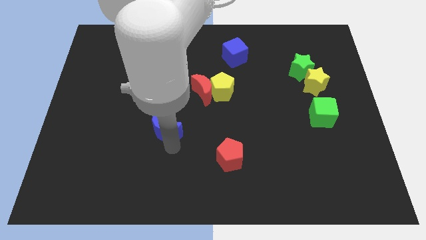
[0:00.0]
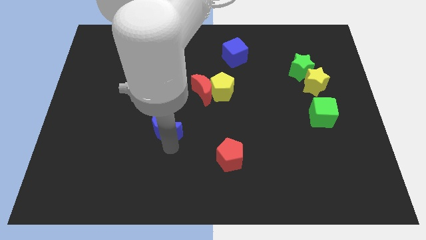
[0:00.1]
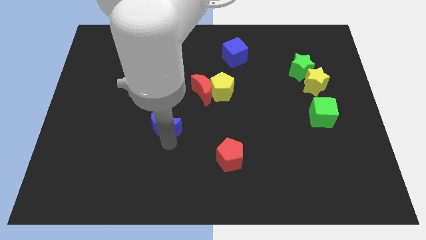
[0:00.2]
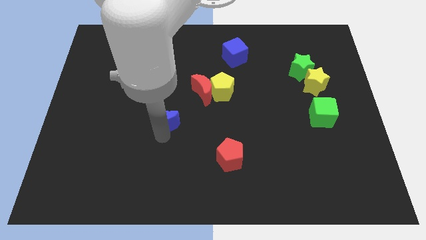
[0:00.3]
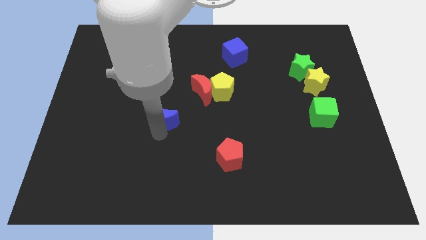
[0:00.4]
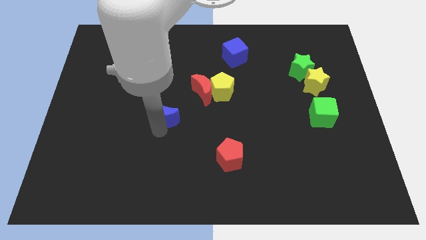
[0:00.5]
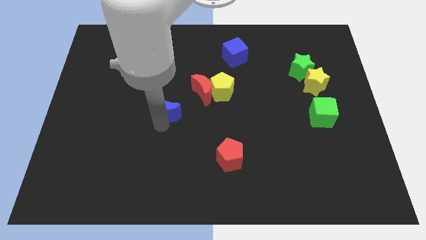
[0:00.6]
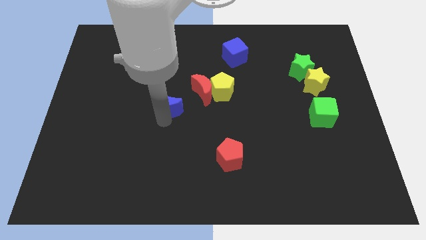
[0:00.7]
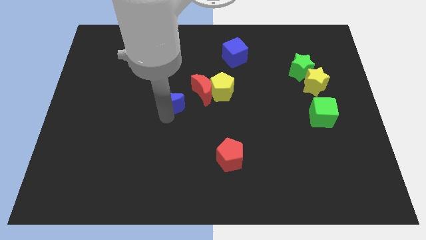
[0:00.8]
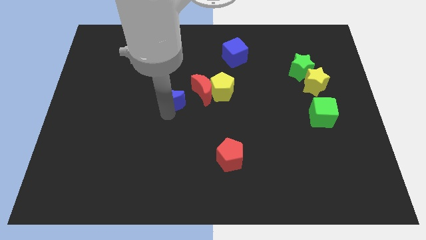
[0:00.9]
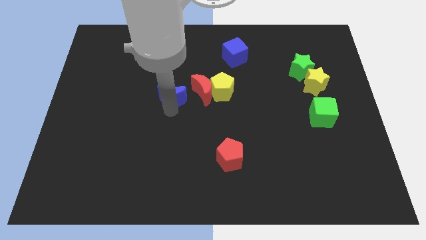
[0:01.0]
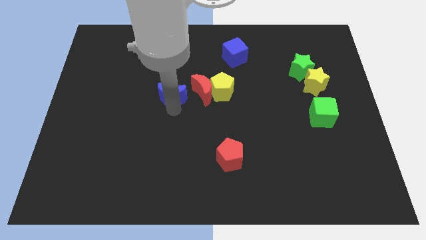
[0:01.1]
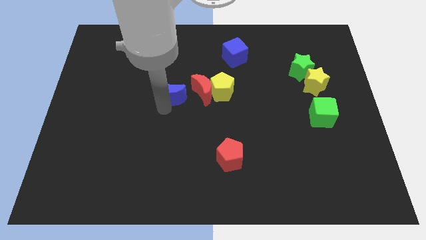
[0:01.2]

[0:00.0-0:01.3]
slightly push the blue moon upwards

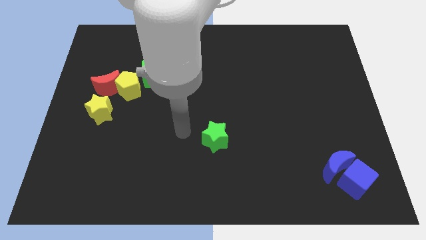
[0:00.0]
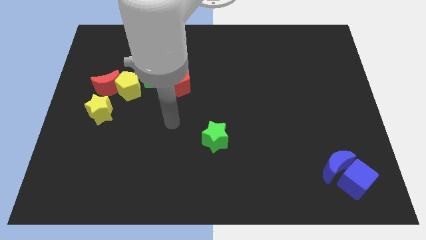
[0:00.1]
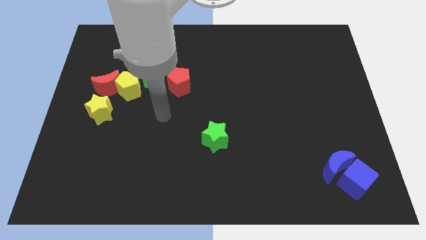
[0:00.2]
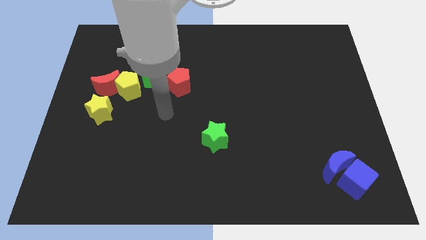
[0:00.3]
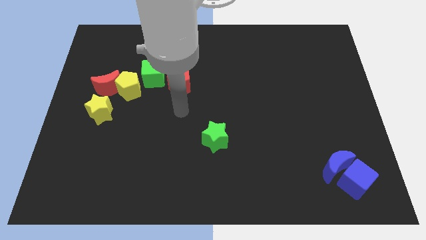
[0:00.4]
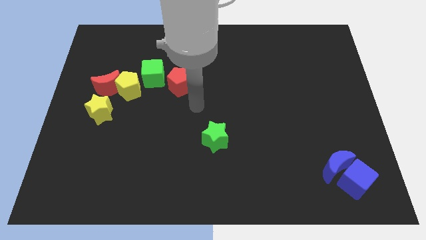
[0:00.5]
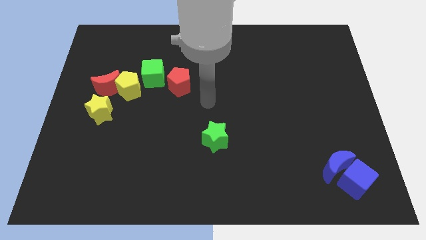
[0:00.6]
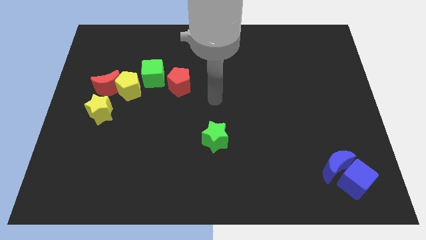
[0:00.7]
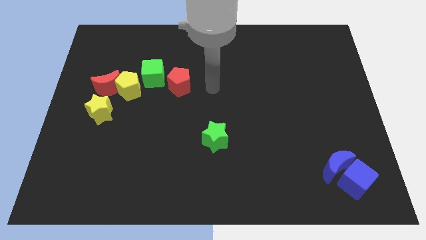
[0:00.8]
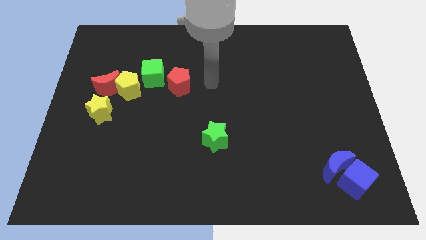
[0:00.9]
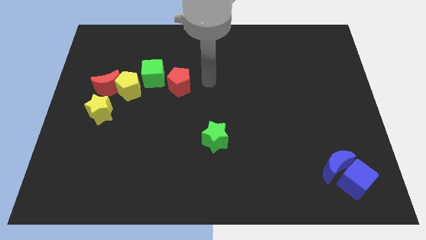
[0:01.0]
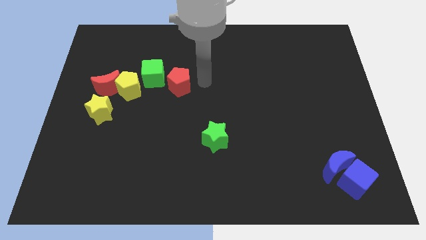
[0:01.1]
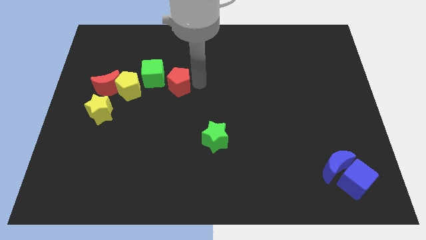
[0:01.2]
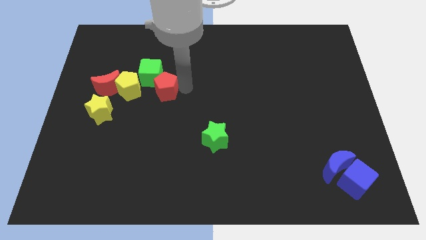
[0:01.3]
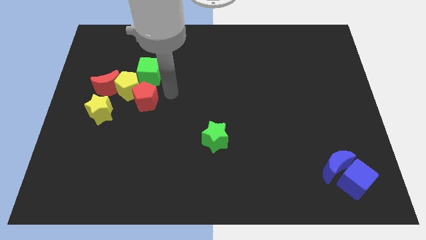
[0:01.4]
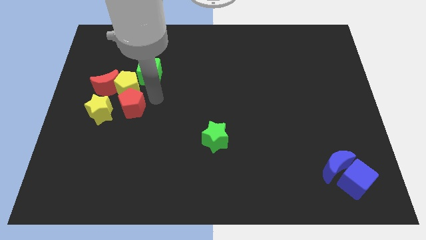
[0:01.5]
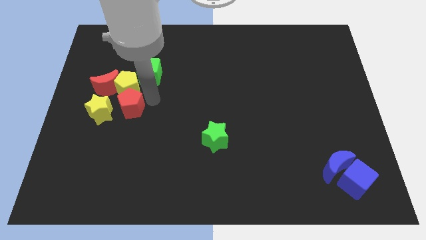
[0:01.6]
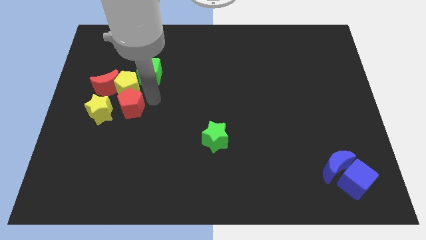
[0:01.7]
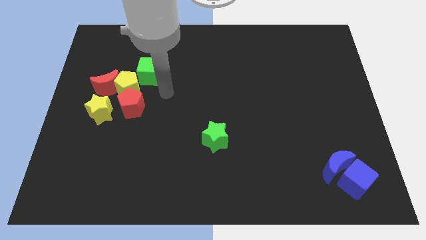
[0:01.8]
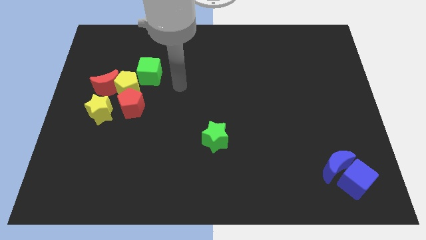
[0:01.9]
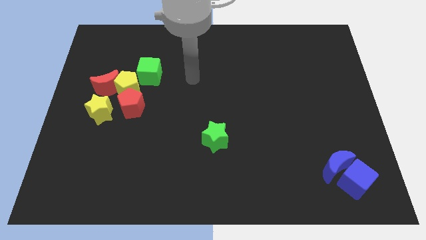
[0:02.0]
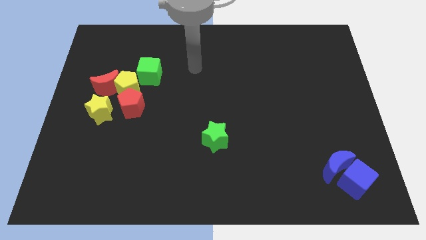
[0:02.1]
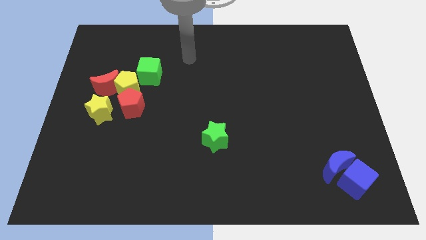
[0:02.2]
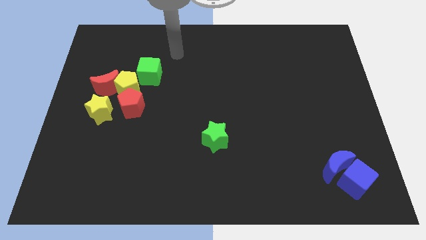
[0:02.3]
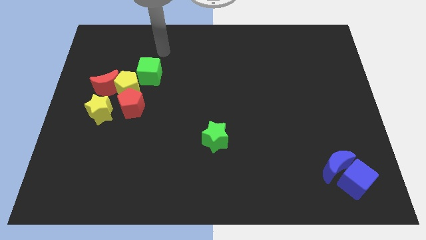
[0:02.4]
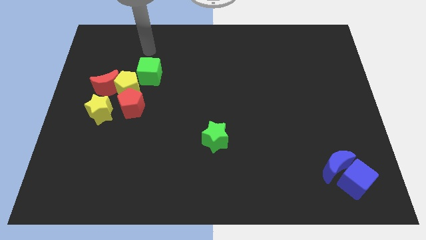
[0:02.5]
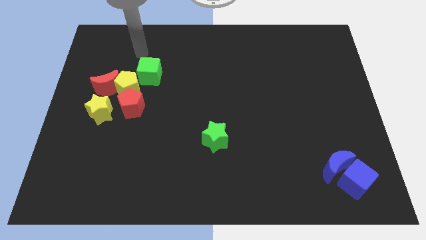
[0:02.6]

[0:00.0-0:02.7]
move red pentagon to the right of the yellow star

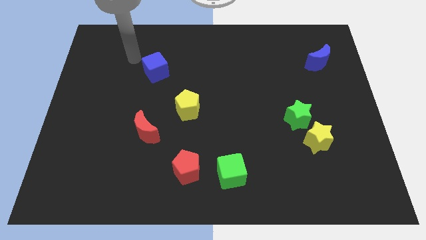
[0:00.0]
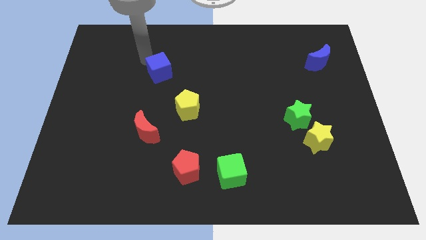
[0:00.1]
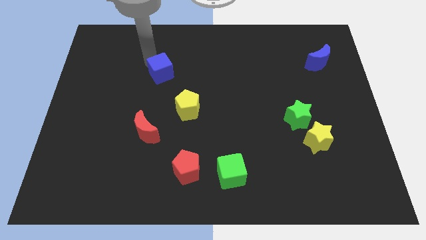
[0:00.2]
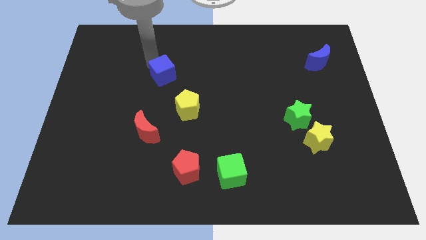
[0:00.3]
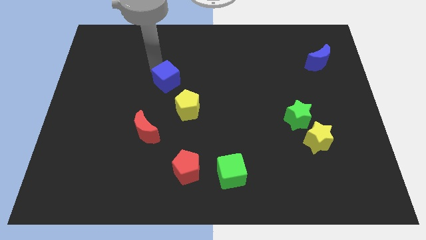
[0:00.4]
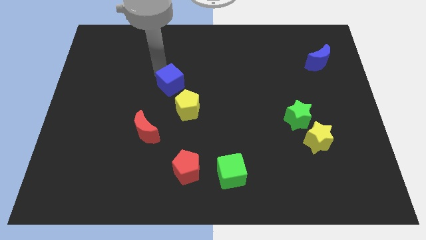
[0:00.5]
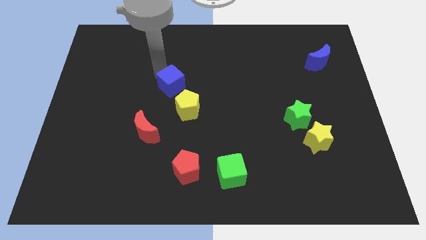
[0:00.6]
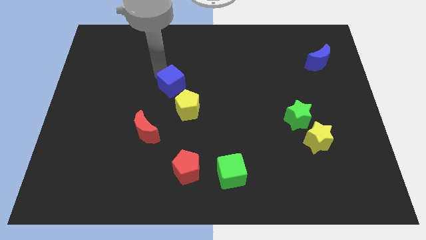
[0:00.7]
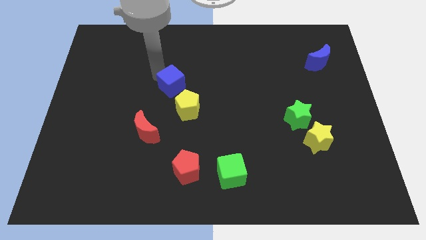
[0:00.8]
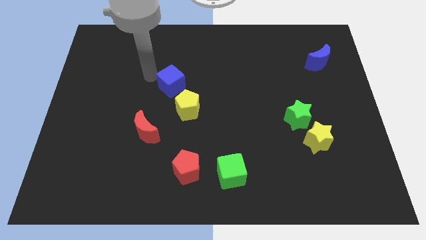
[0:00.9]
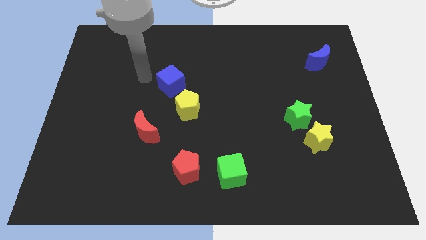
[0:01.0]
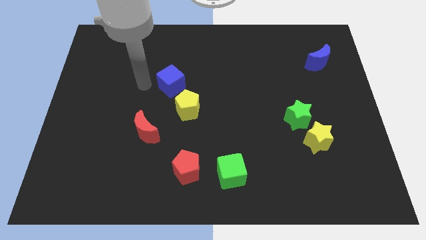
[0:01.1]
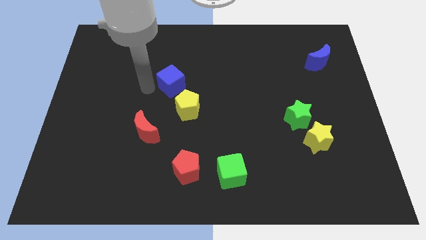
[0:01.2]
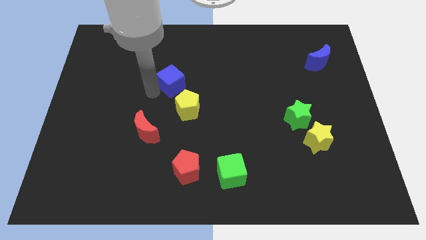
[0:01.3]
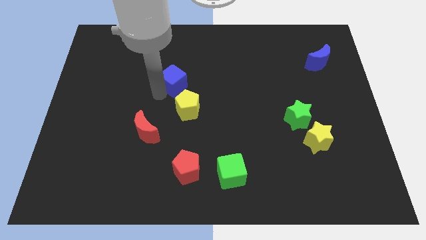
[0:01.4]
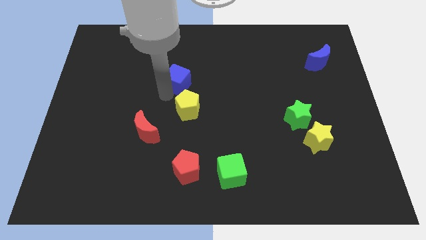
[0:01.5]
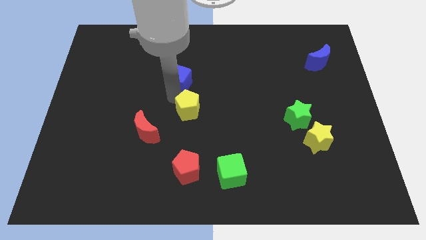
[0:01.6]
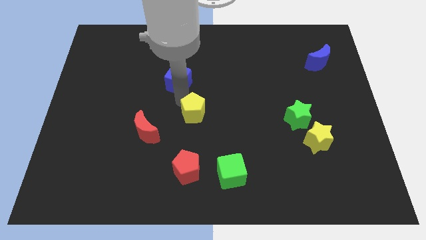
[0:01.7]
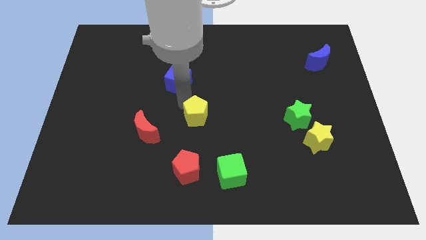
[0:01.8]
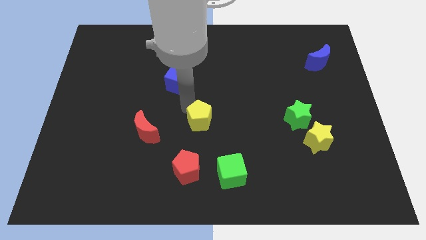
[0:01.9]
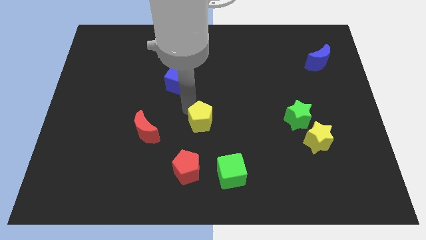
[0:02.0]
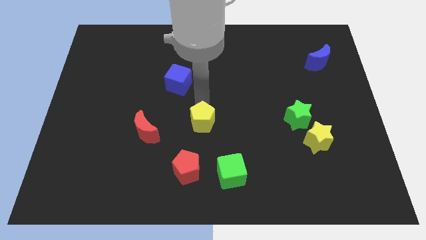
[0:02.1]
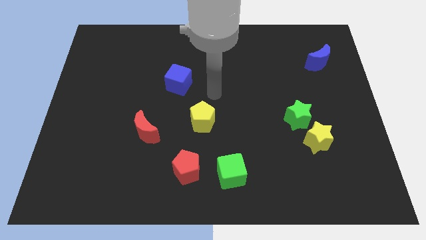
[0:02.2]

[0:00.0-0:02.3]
move the yellow pentagon parallel top right of the red pentagon

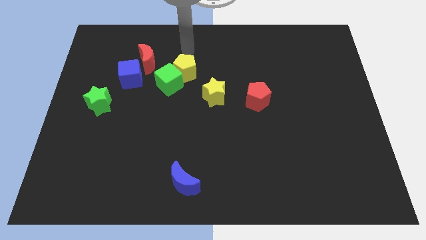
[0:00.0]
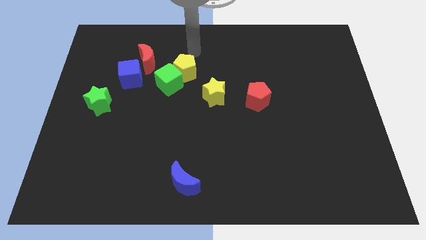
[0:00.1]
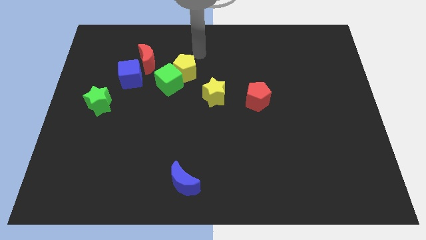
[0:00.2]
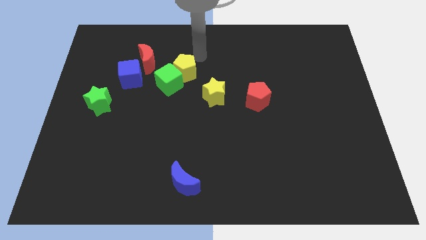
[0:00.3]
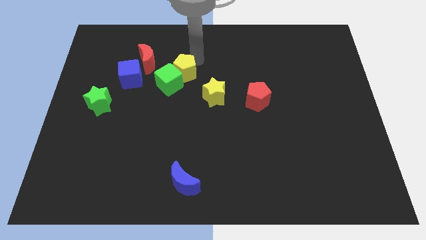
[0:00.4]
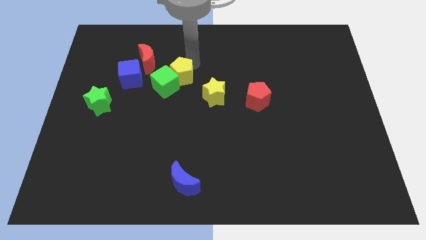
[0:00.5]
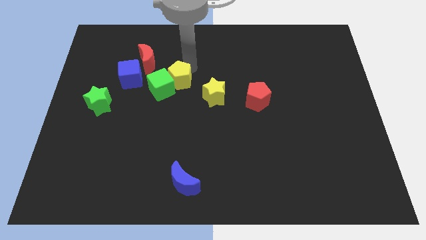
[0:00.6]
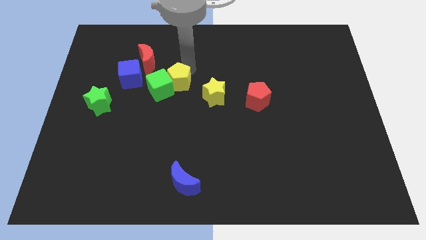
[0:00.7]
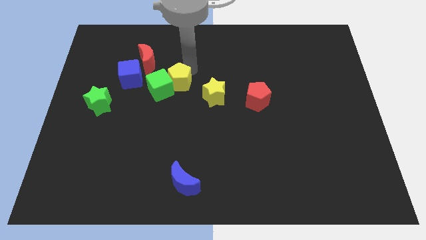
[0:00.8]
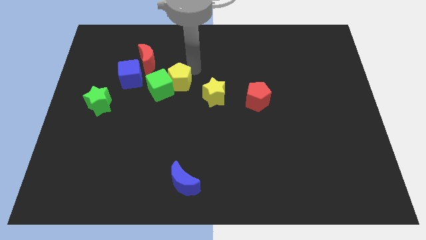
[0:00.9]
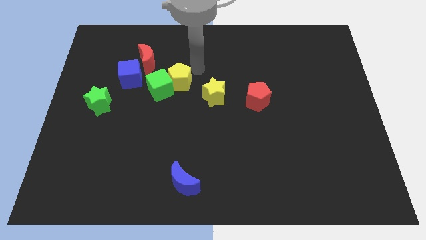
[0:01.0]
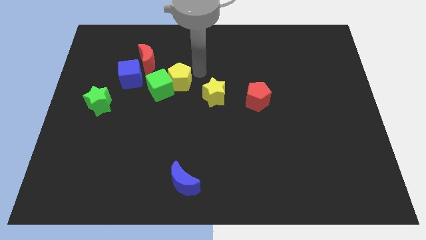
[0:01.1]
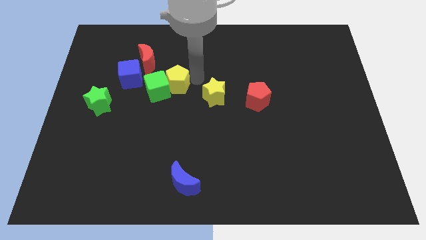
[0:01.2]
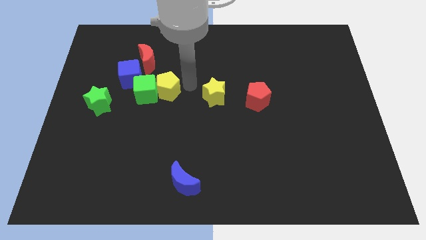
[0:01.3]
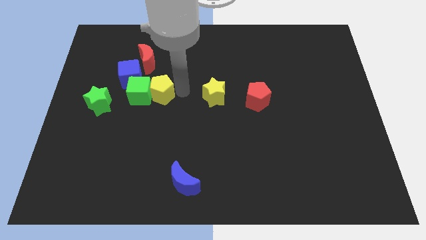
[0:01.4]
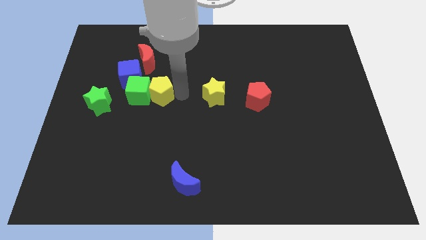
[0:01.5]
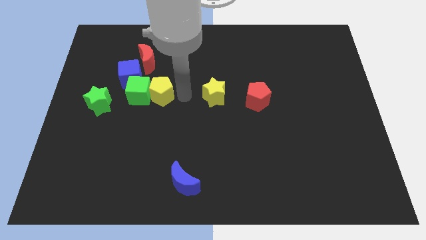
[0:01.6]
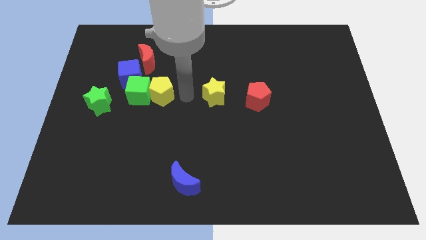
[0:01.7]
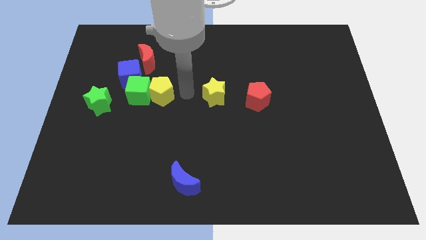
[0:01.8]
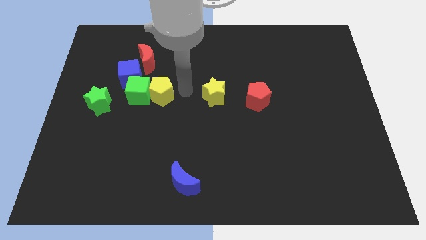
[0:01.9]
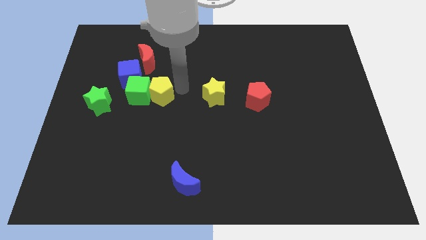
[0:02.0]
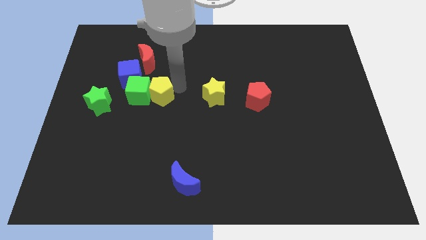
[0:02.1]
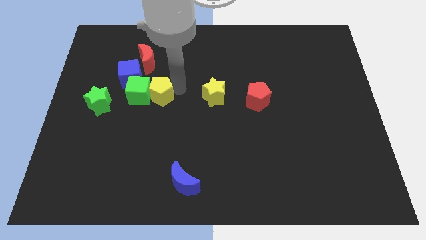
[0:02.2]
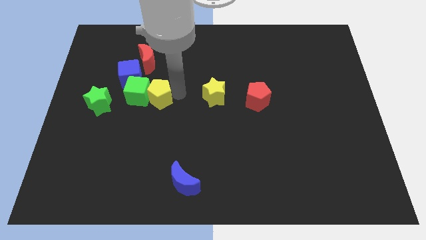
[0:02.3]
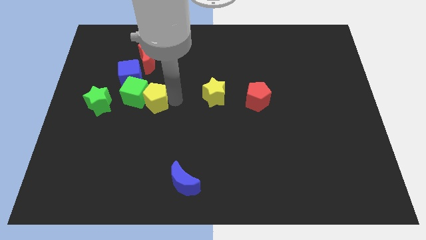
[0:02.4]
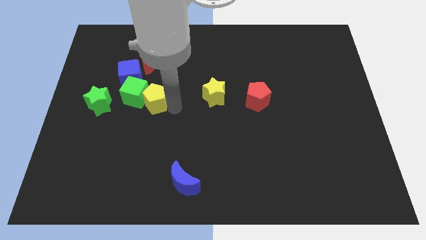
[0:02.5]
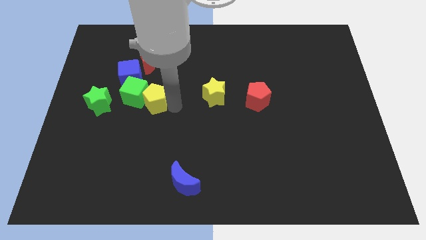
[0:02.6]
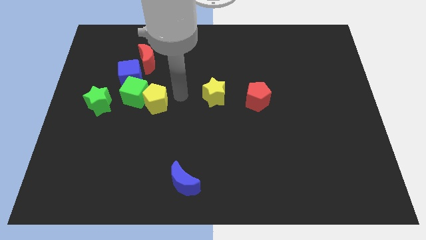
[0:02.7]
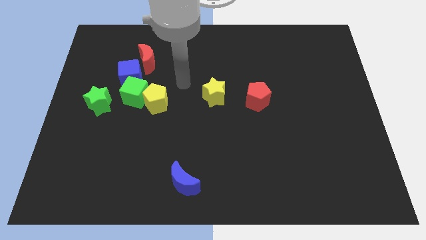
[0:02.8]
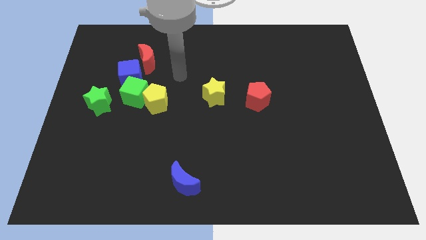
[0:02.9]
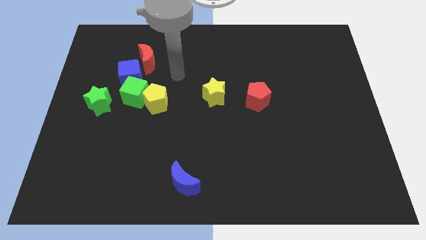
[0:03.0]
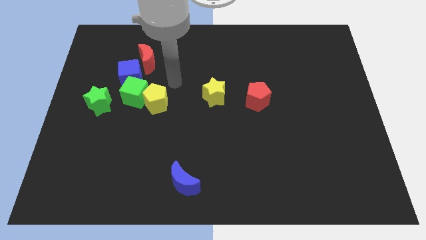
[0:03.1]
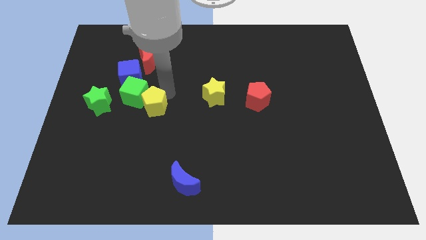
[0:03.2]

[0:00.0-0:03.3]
move yellow pentagon along with green cube to the right of green star
